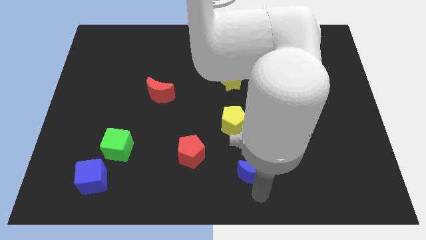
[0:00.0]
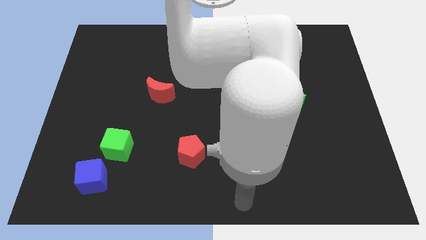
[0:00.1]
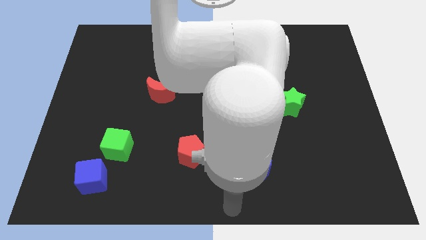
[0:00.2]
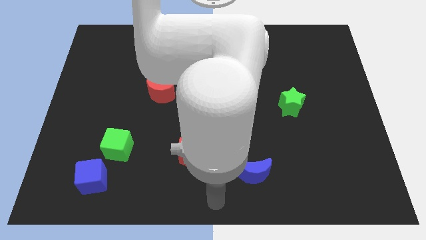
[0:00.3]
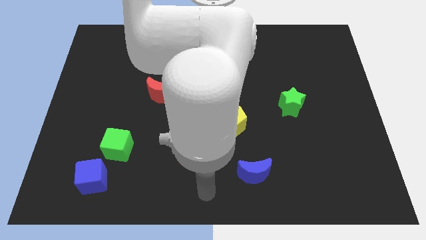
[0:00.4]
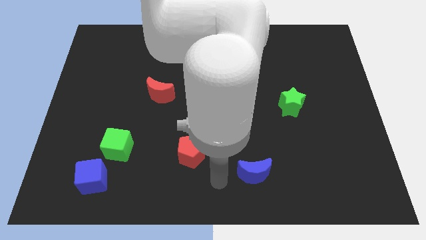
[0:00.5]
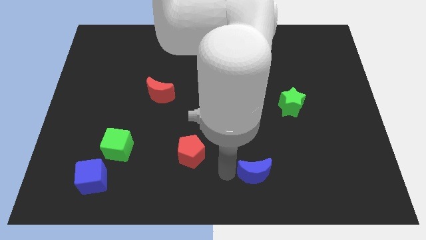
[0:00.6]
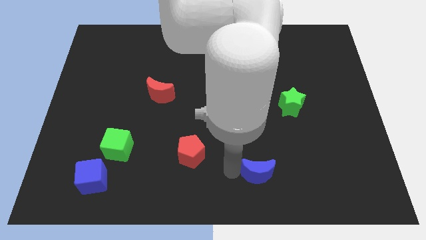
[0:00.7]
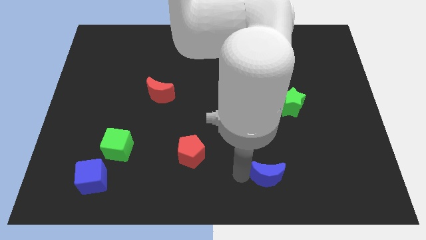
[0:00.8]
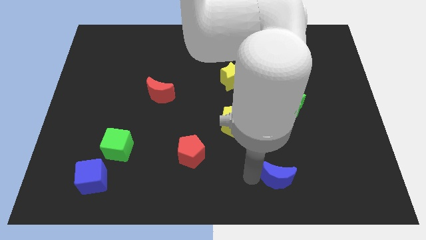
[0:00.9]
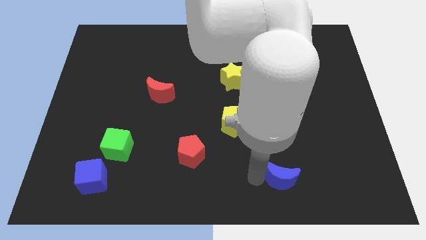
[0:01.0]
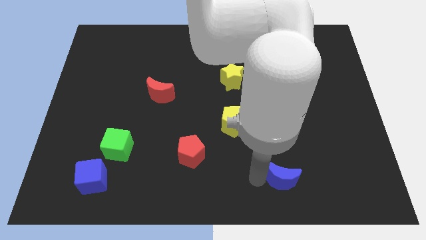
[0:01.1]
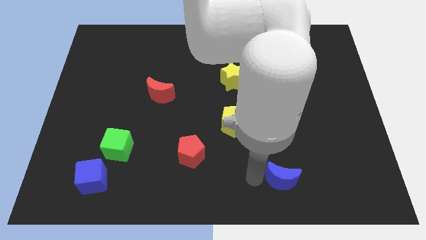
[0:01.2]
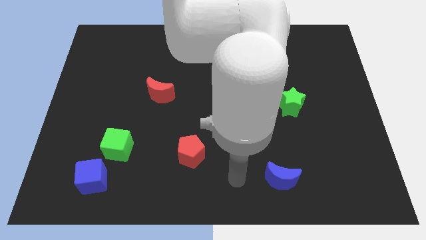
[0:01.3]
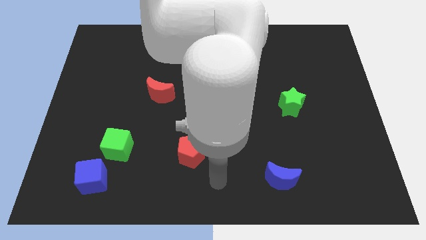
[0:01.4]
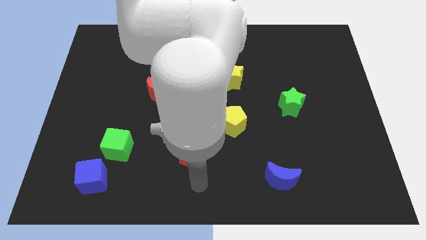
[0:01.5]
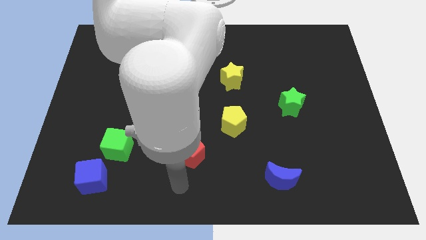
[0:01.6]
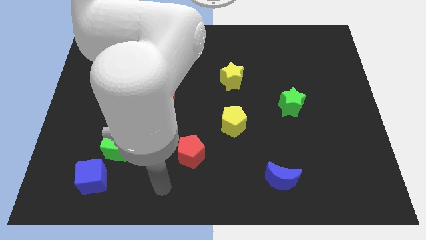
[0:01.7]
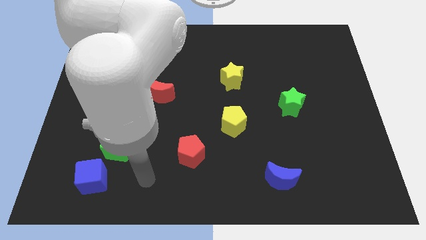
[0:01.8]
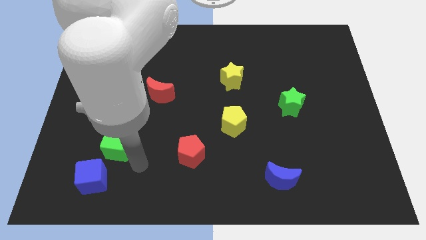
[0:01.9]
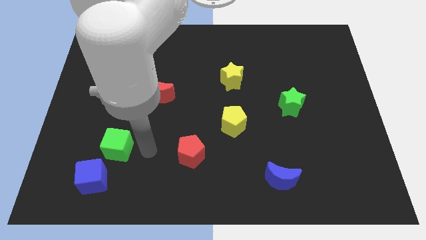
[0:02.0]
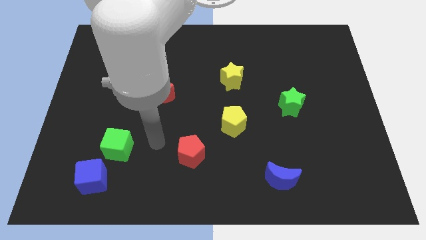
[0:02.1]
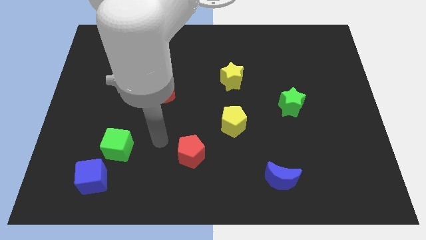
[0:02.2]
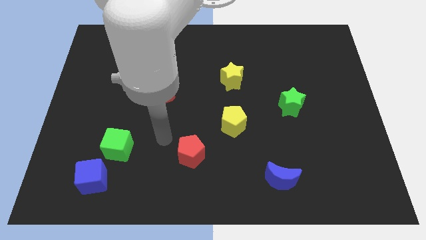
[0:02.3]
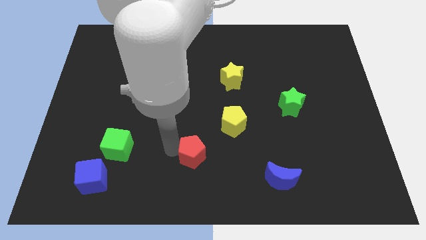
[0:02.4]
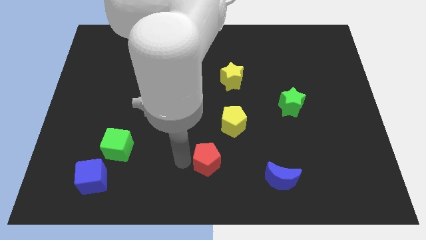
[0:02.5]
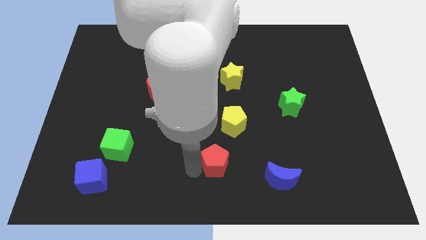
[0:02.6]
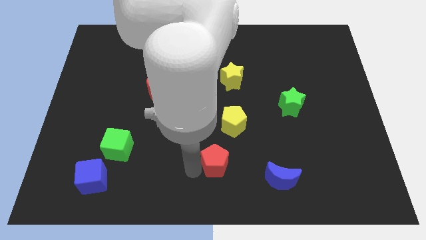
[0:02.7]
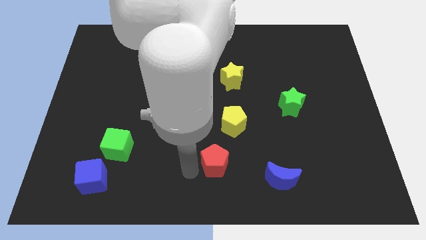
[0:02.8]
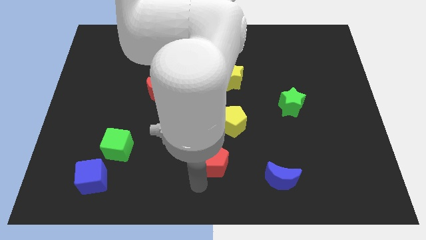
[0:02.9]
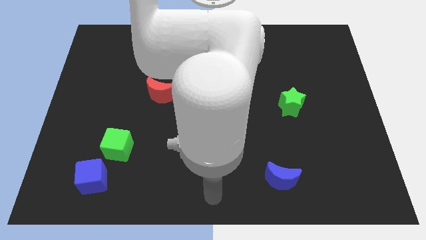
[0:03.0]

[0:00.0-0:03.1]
place the red pentagon slightly towards the bottom center of the board

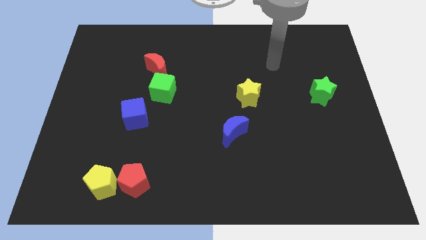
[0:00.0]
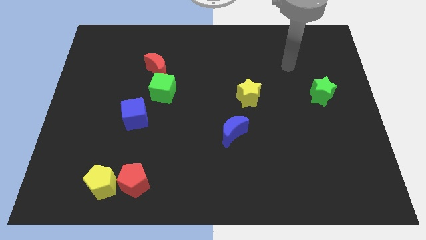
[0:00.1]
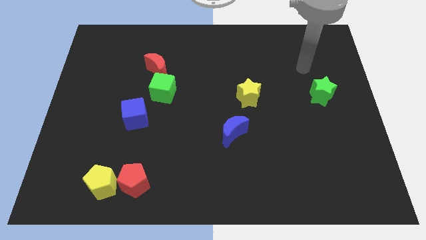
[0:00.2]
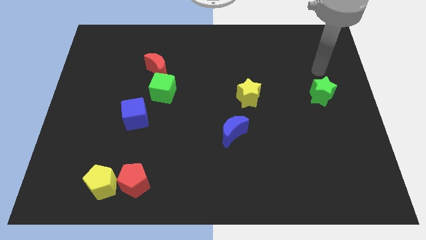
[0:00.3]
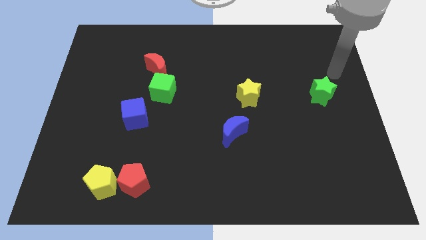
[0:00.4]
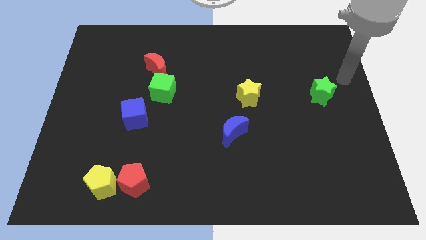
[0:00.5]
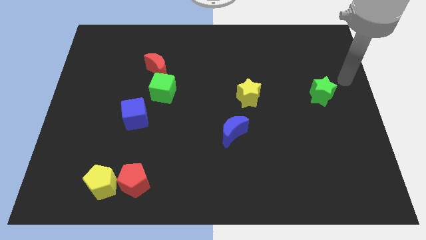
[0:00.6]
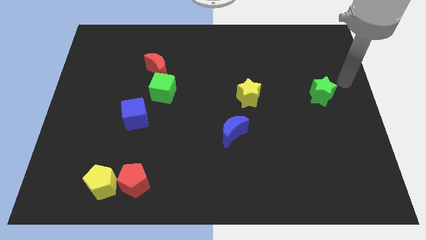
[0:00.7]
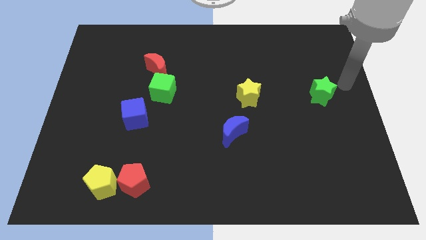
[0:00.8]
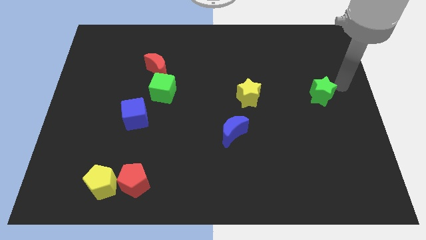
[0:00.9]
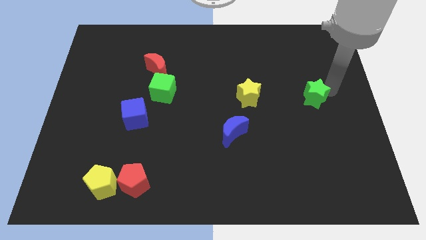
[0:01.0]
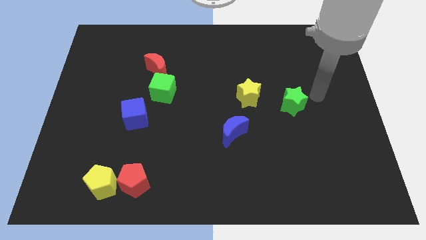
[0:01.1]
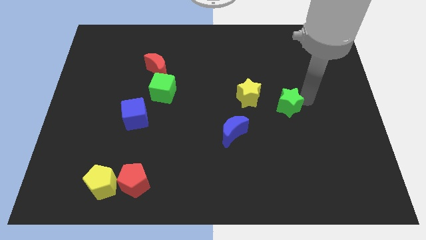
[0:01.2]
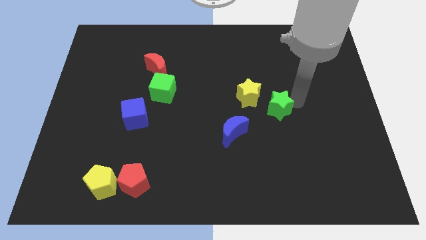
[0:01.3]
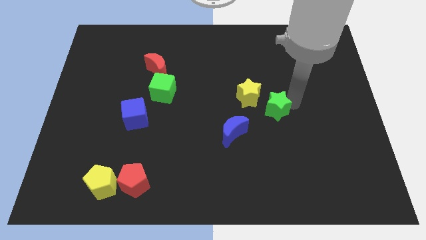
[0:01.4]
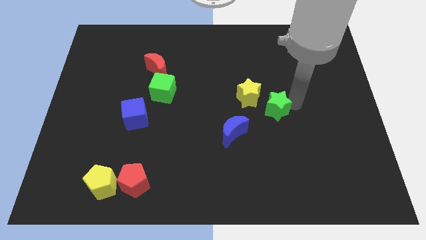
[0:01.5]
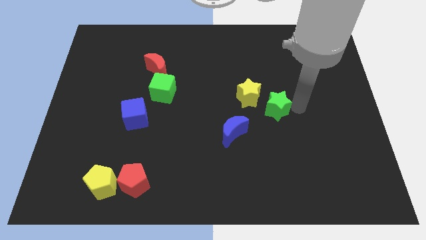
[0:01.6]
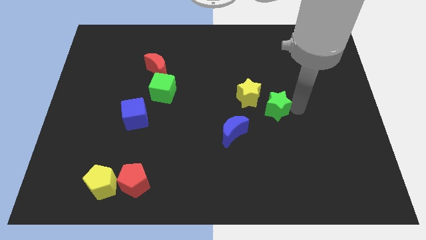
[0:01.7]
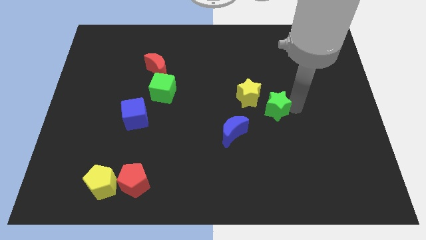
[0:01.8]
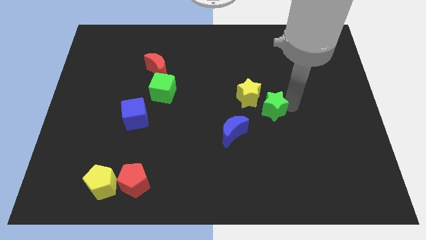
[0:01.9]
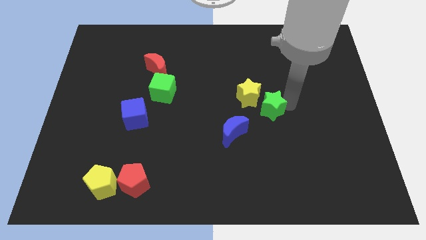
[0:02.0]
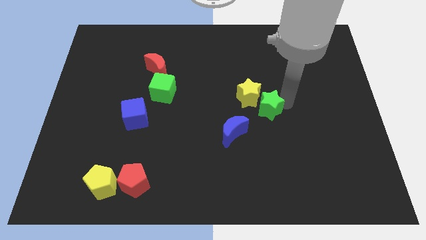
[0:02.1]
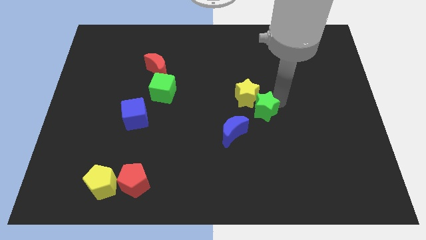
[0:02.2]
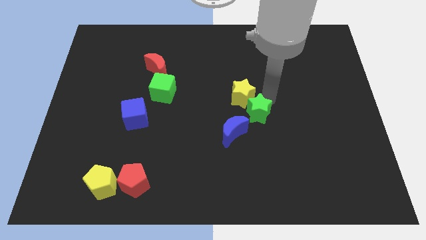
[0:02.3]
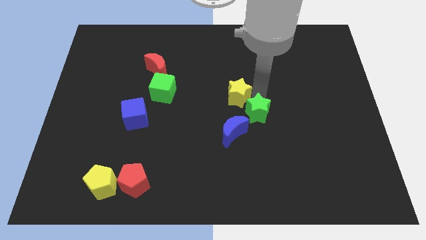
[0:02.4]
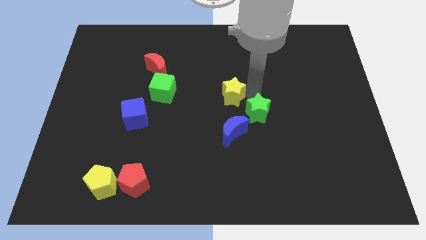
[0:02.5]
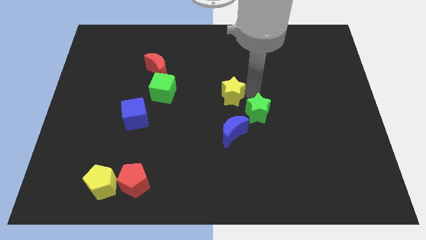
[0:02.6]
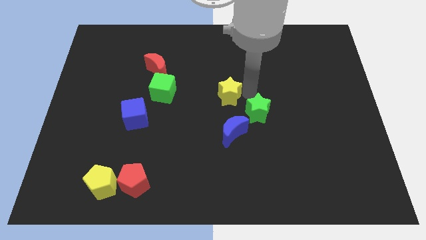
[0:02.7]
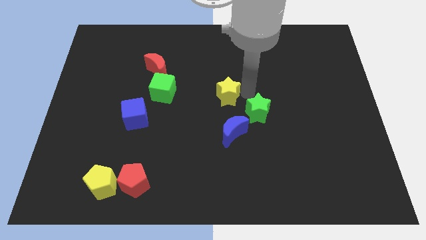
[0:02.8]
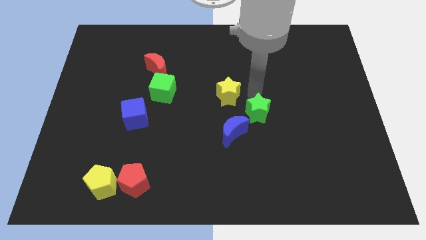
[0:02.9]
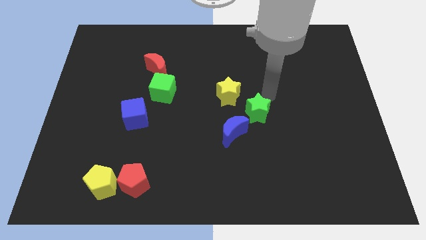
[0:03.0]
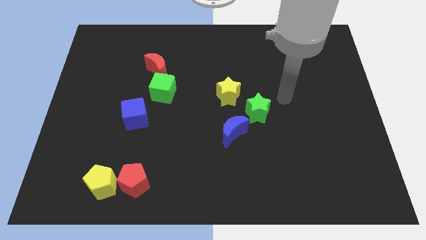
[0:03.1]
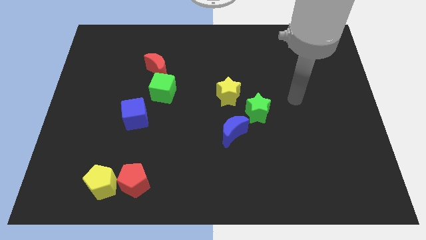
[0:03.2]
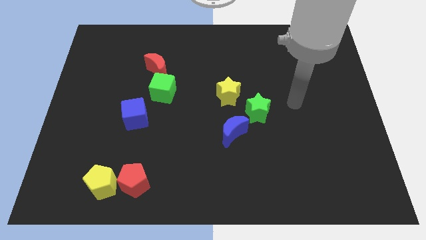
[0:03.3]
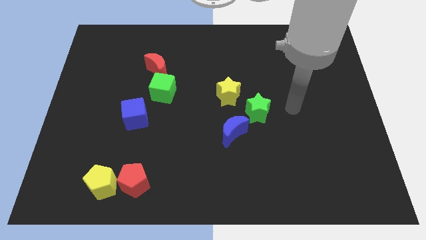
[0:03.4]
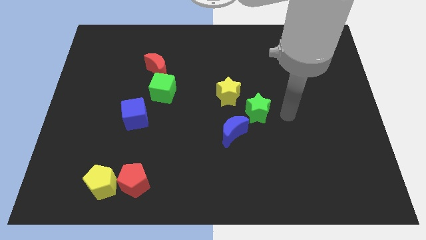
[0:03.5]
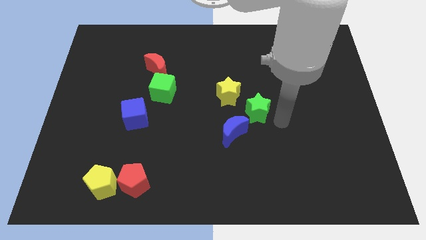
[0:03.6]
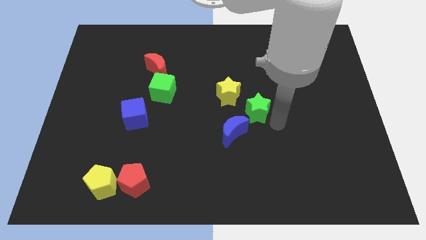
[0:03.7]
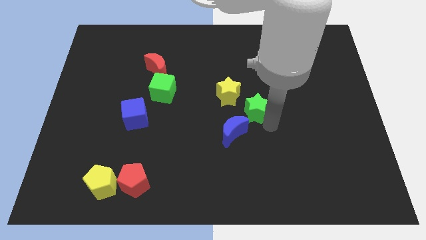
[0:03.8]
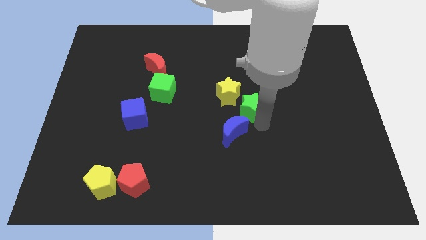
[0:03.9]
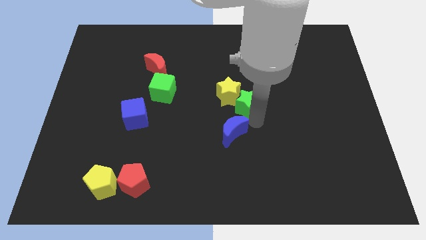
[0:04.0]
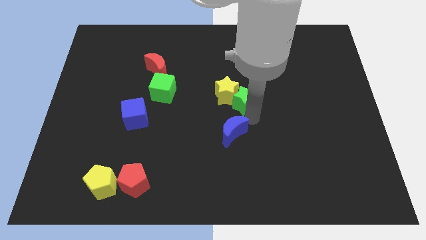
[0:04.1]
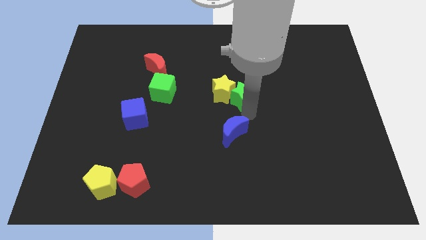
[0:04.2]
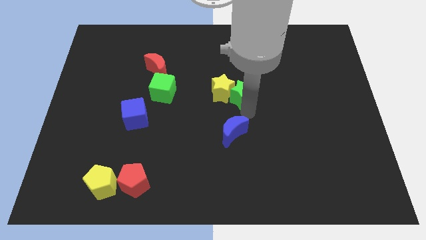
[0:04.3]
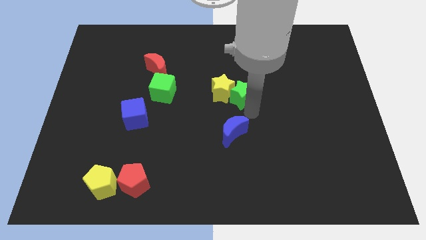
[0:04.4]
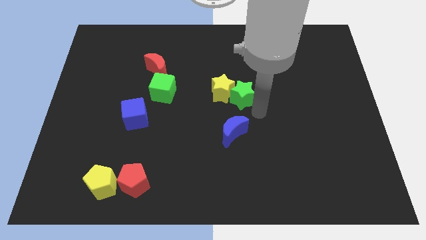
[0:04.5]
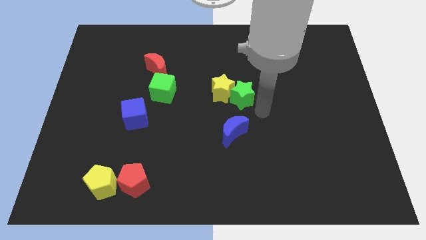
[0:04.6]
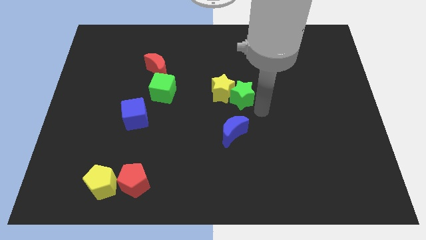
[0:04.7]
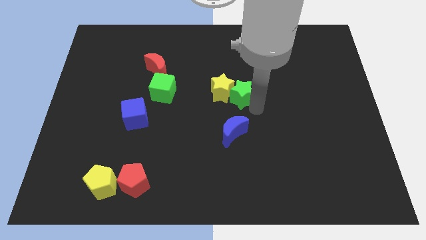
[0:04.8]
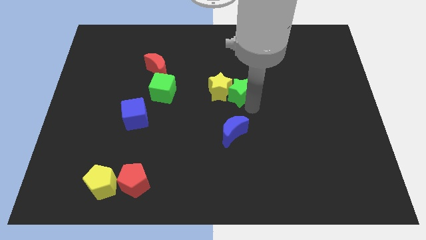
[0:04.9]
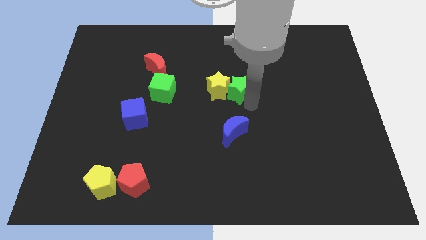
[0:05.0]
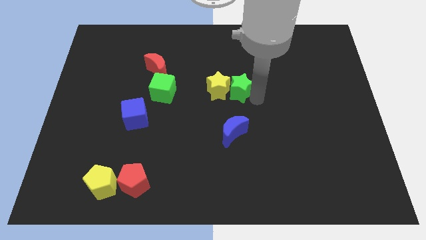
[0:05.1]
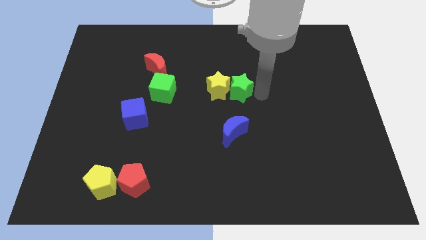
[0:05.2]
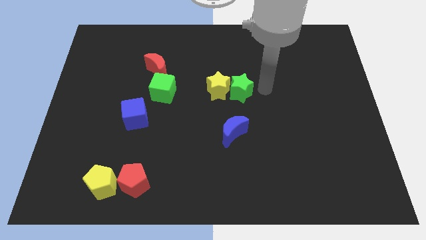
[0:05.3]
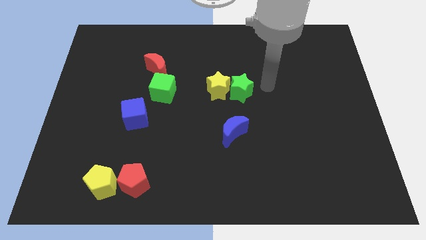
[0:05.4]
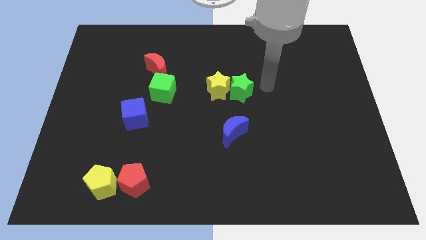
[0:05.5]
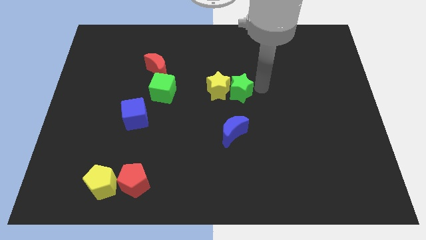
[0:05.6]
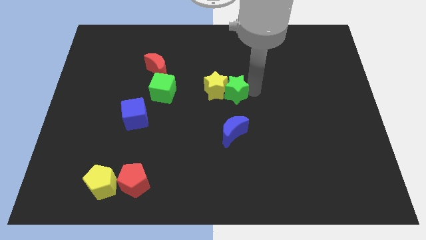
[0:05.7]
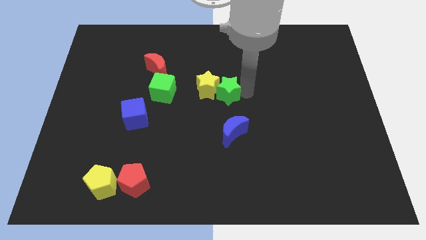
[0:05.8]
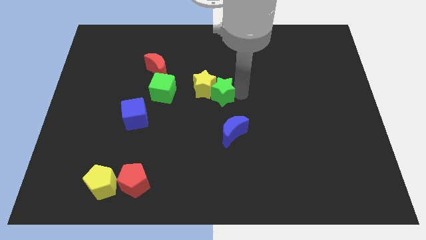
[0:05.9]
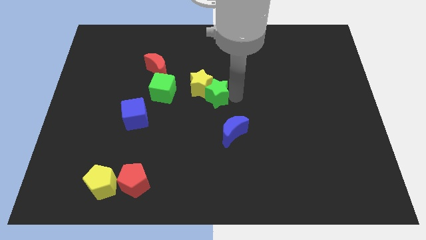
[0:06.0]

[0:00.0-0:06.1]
push yellow and green stars towards the center of the board
